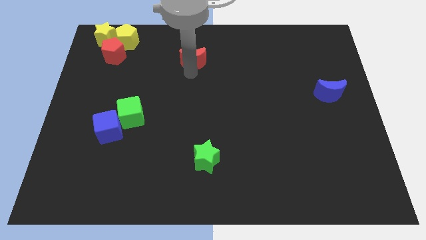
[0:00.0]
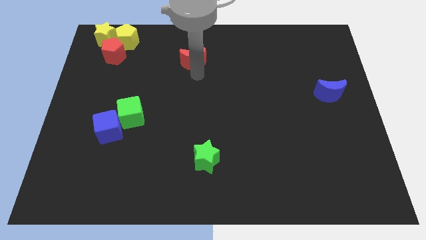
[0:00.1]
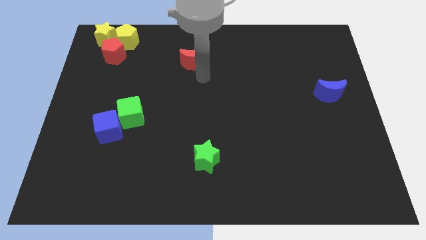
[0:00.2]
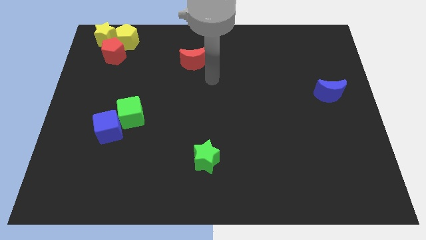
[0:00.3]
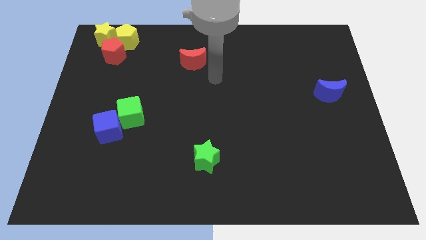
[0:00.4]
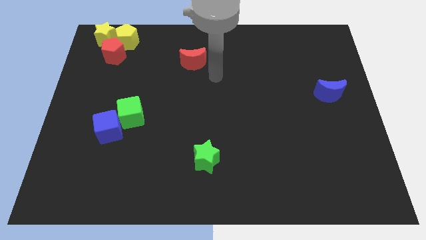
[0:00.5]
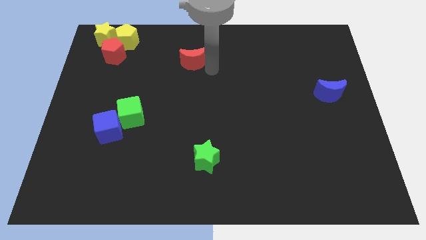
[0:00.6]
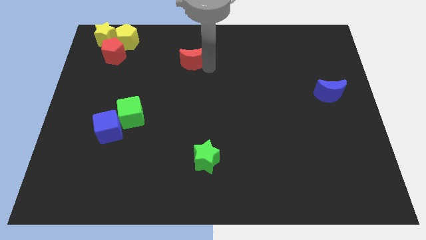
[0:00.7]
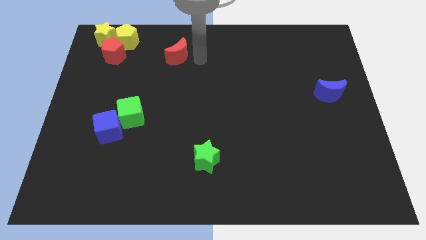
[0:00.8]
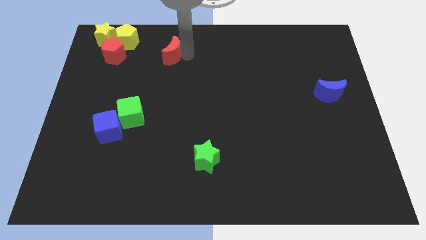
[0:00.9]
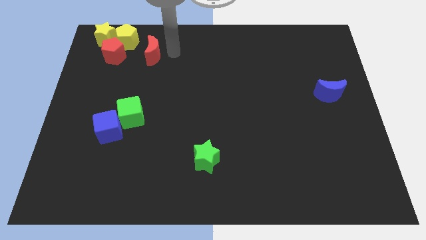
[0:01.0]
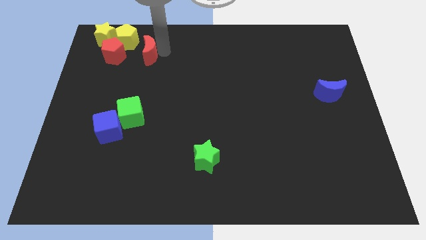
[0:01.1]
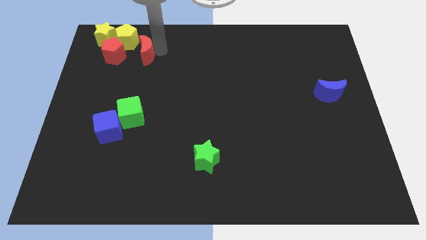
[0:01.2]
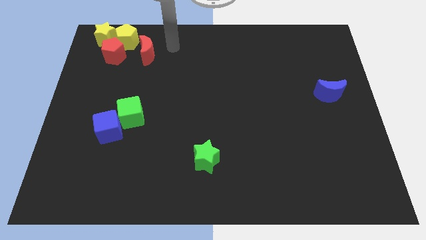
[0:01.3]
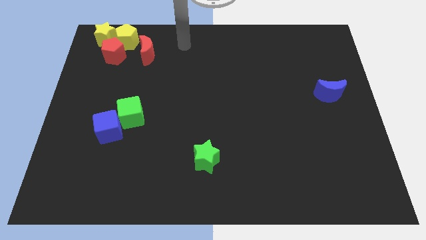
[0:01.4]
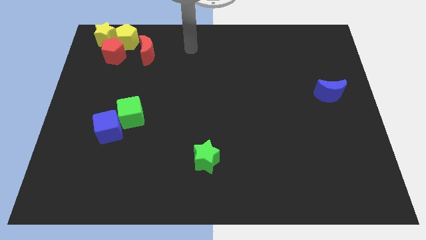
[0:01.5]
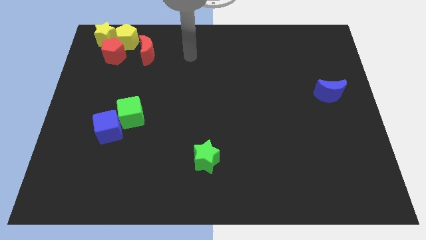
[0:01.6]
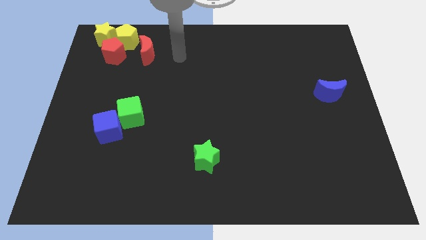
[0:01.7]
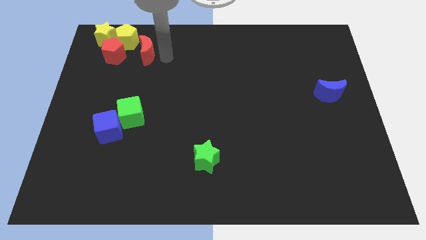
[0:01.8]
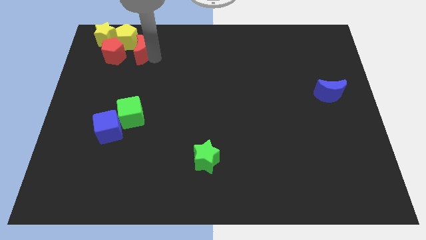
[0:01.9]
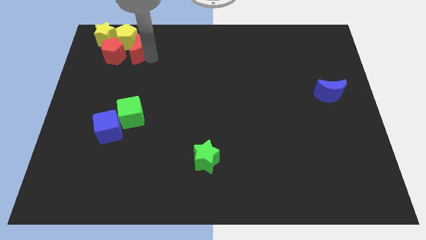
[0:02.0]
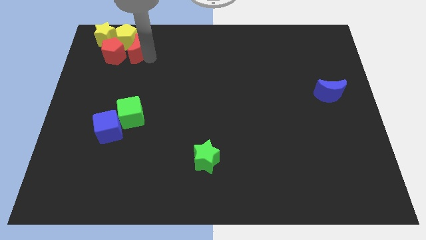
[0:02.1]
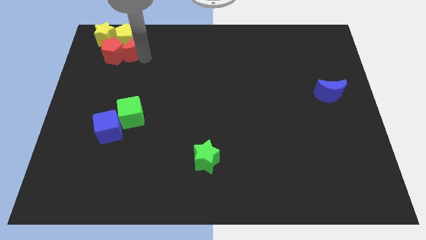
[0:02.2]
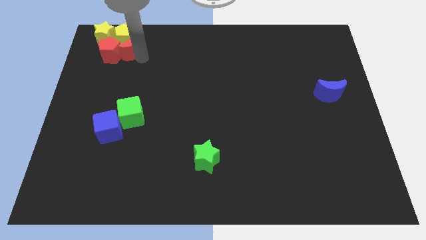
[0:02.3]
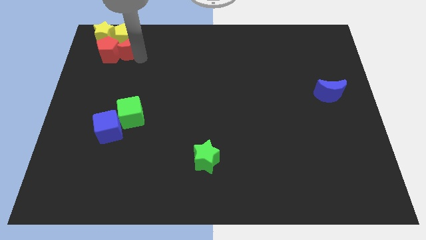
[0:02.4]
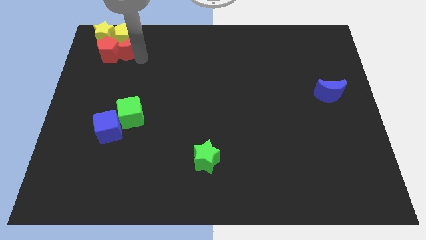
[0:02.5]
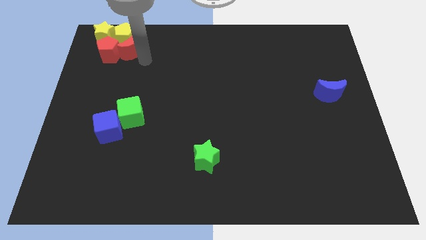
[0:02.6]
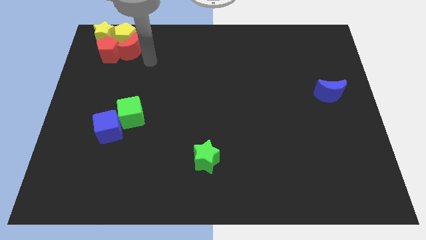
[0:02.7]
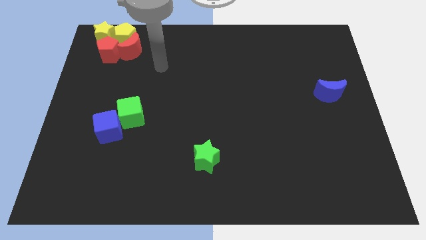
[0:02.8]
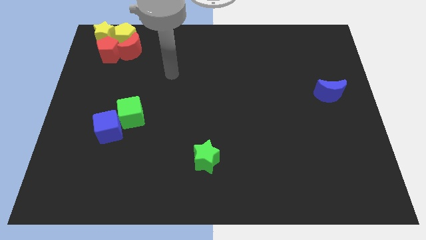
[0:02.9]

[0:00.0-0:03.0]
slide the red moon to the bottom of the yellow pentagon

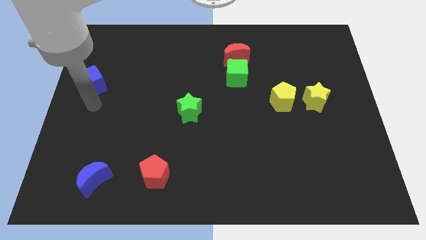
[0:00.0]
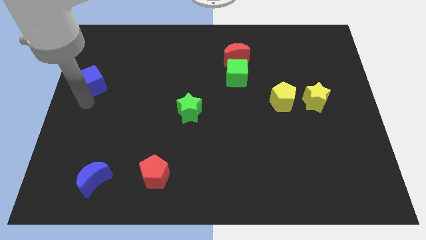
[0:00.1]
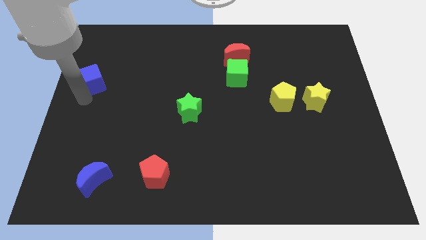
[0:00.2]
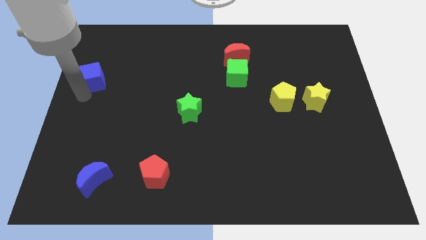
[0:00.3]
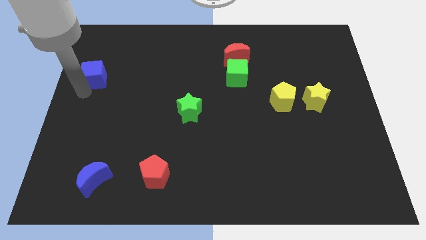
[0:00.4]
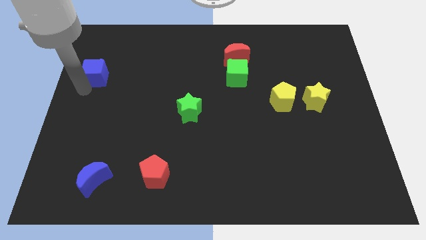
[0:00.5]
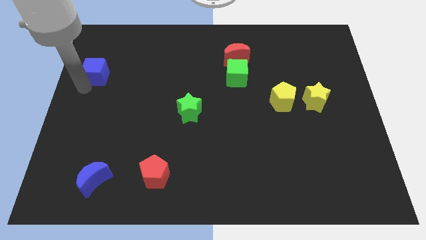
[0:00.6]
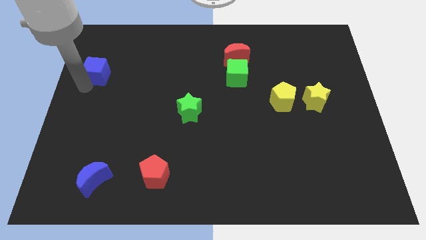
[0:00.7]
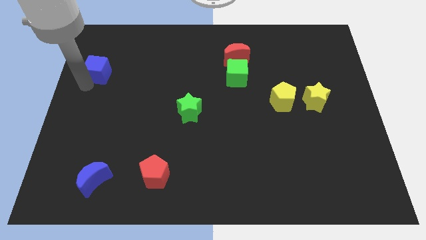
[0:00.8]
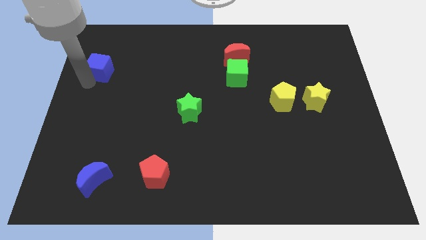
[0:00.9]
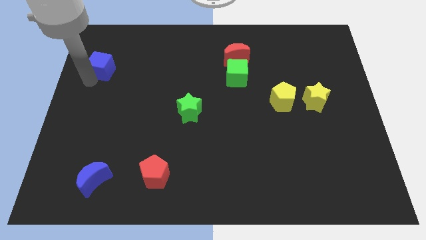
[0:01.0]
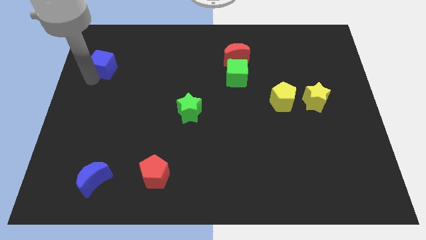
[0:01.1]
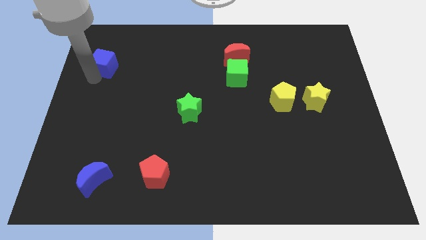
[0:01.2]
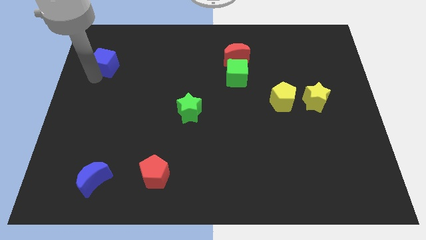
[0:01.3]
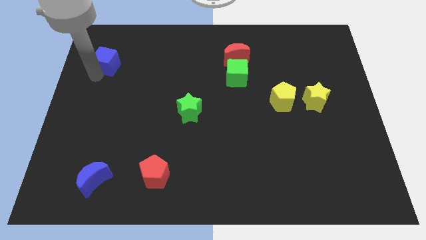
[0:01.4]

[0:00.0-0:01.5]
push the blue cube to the top of the board

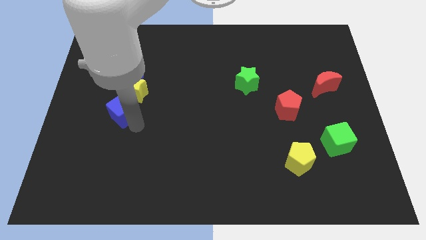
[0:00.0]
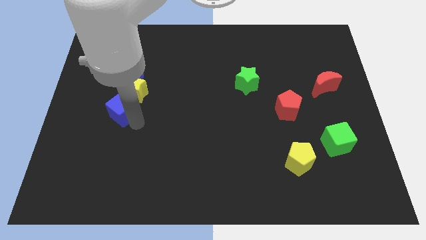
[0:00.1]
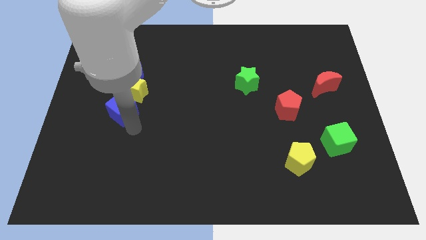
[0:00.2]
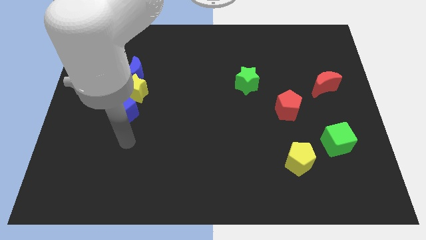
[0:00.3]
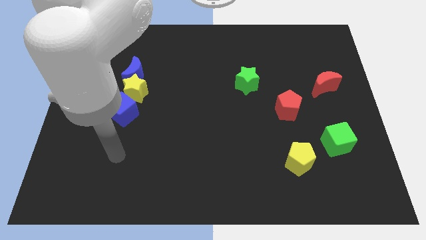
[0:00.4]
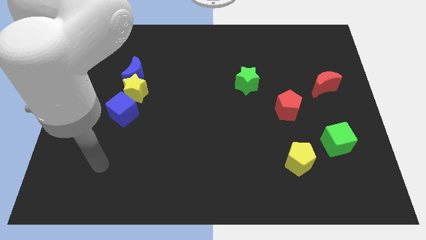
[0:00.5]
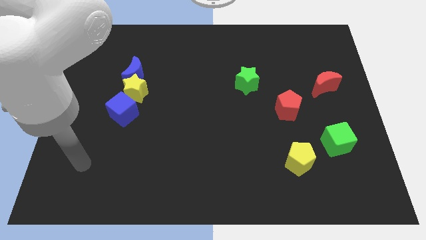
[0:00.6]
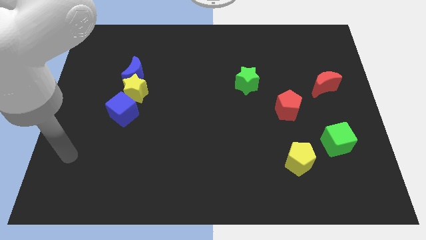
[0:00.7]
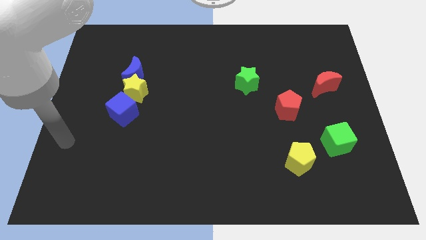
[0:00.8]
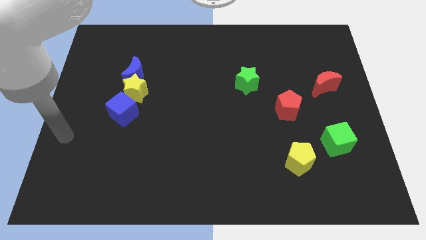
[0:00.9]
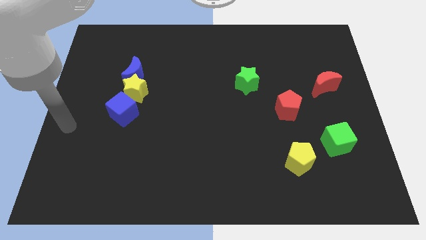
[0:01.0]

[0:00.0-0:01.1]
move your arm to the left center of the board

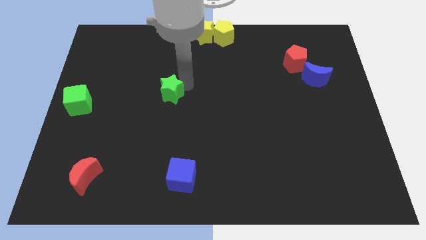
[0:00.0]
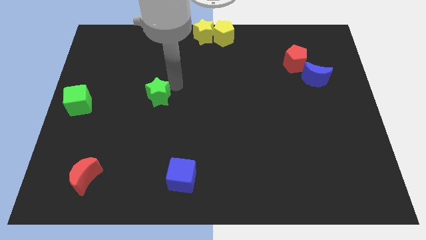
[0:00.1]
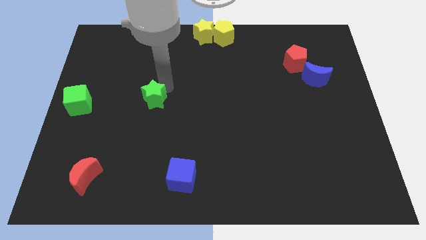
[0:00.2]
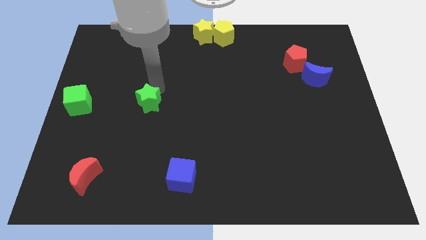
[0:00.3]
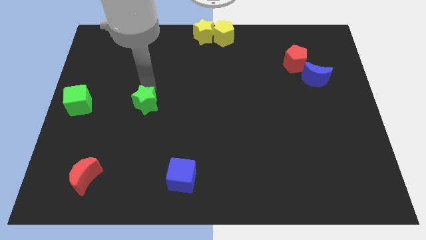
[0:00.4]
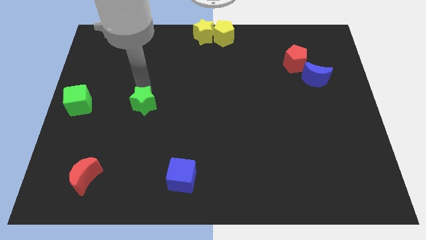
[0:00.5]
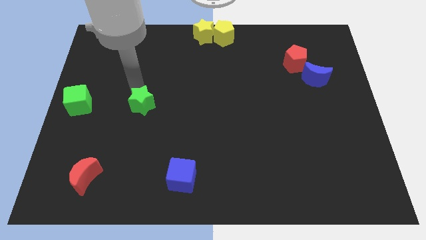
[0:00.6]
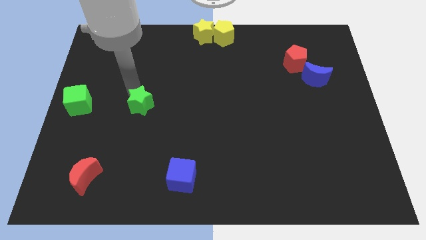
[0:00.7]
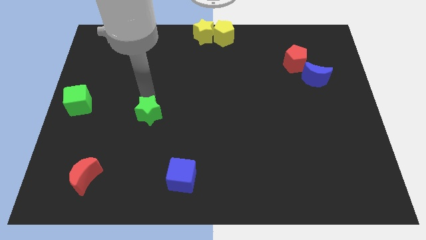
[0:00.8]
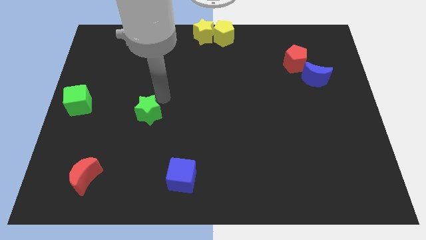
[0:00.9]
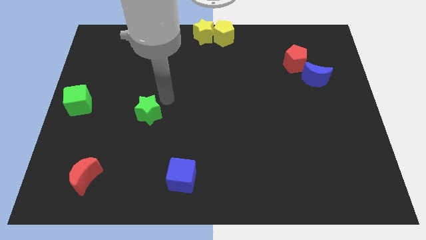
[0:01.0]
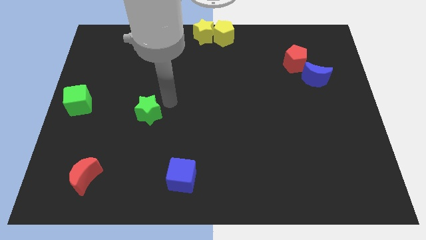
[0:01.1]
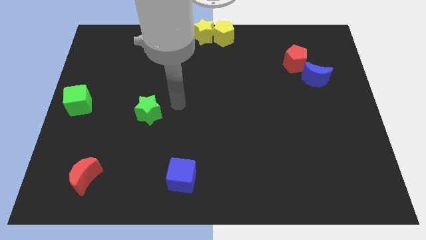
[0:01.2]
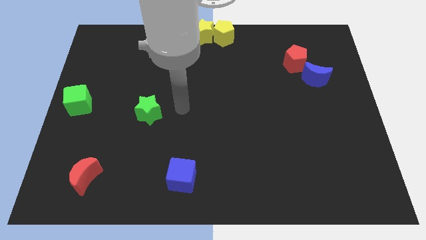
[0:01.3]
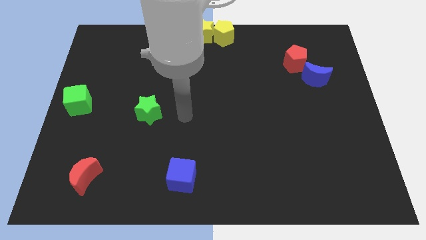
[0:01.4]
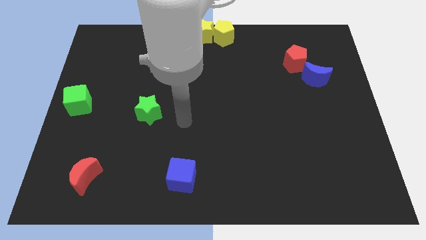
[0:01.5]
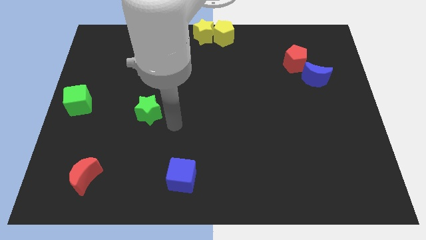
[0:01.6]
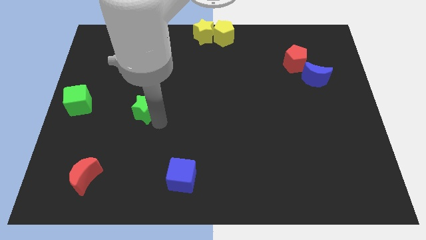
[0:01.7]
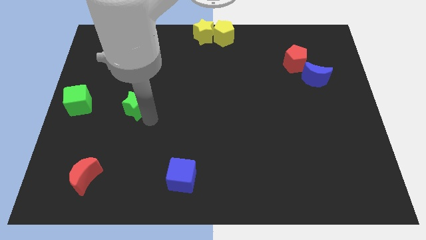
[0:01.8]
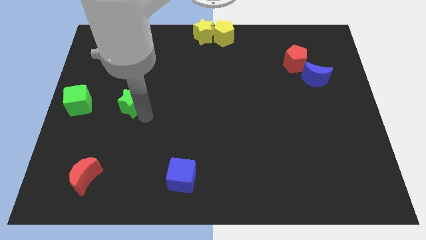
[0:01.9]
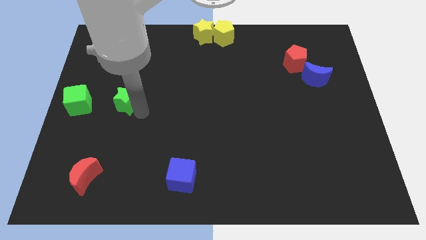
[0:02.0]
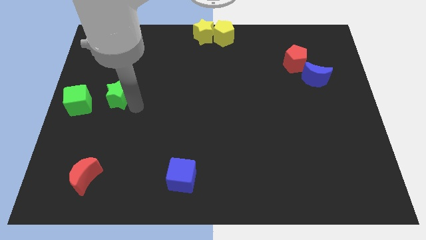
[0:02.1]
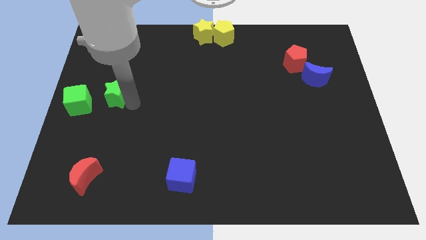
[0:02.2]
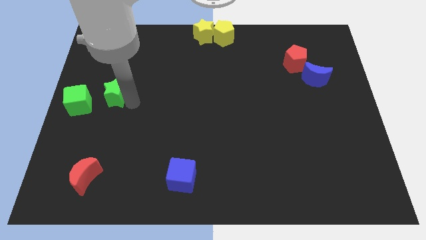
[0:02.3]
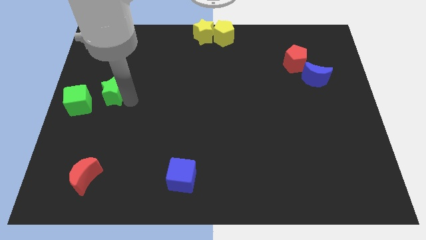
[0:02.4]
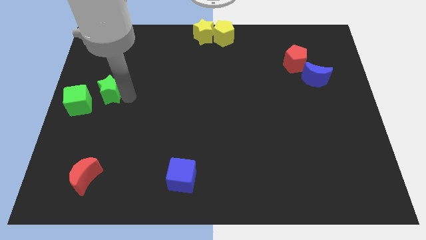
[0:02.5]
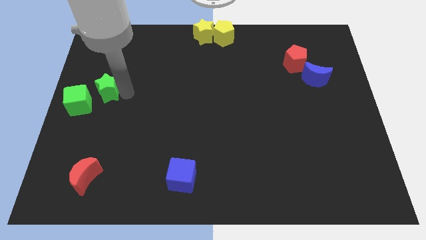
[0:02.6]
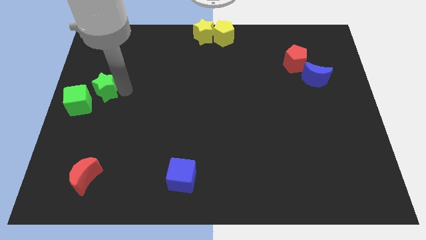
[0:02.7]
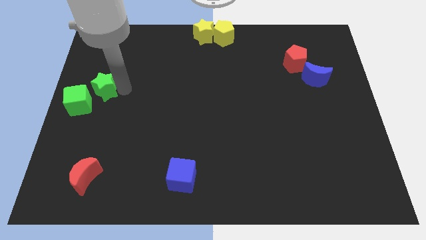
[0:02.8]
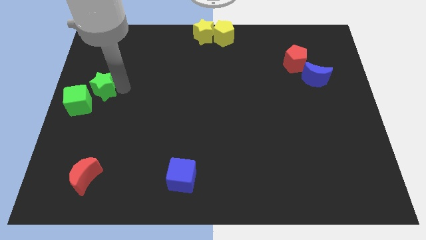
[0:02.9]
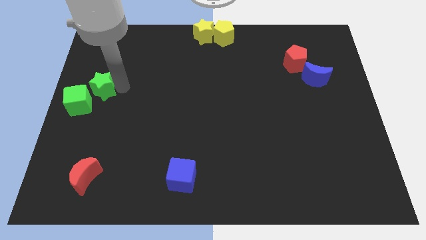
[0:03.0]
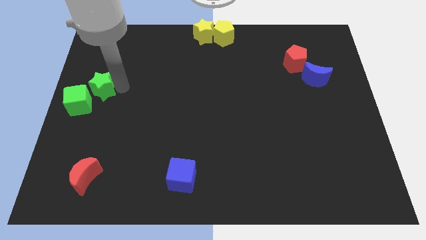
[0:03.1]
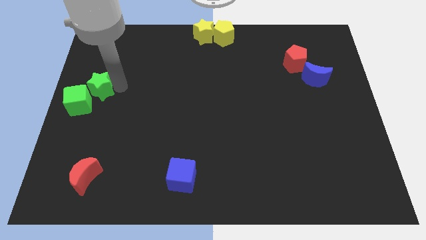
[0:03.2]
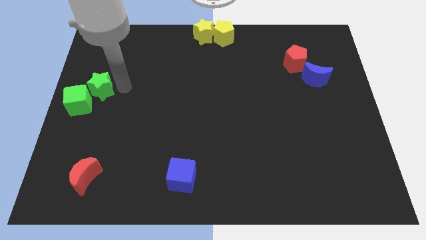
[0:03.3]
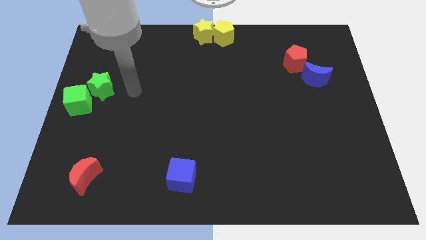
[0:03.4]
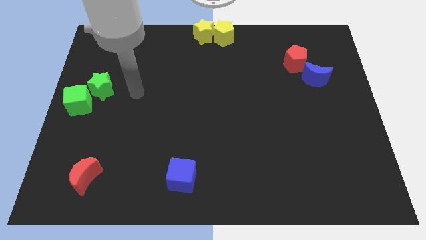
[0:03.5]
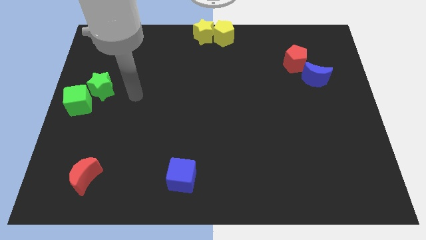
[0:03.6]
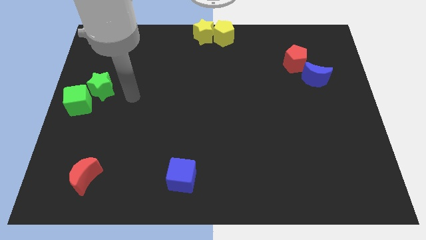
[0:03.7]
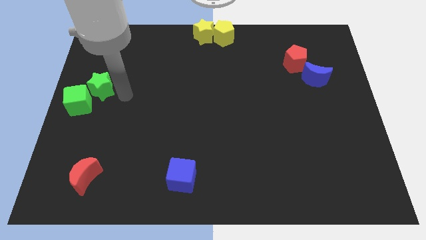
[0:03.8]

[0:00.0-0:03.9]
move the green star to the top right of the green cube
